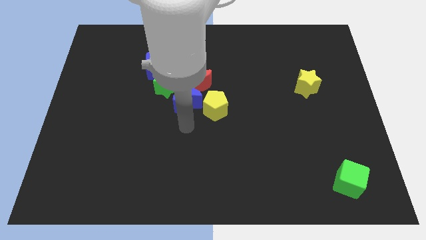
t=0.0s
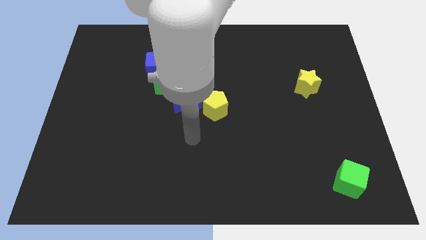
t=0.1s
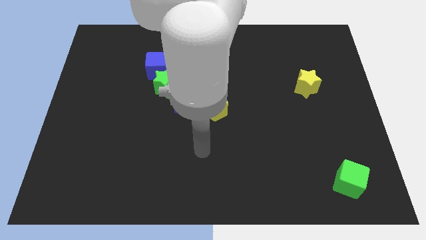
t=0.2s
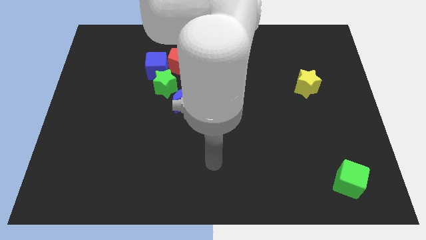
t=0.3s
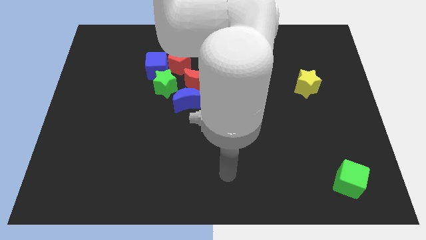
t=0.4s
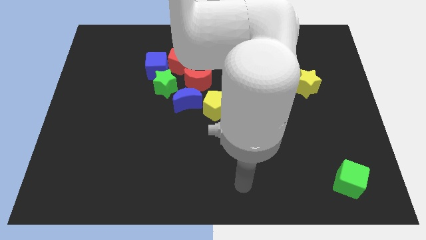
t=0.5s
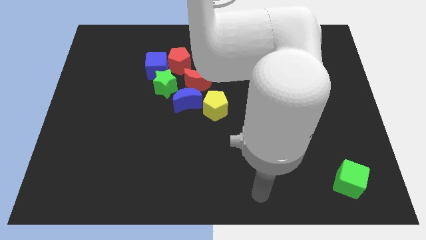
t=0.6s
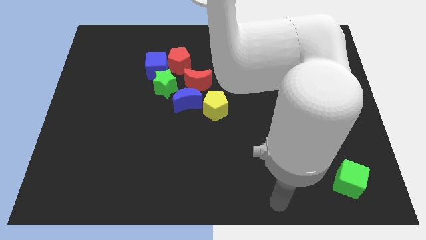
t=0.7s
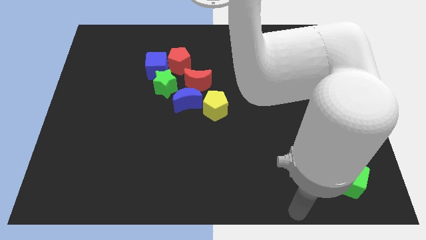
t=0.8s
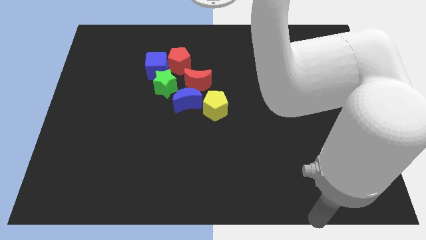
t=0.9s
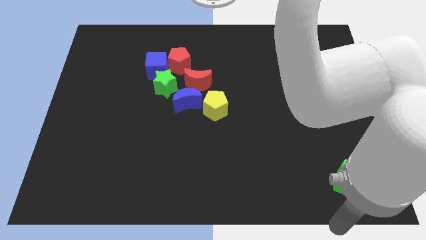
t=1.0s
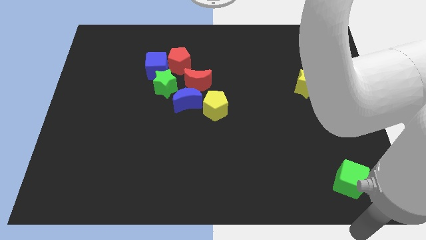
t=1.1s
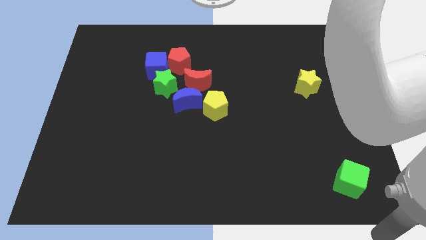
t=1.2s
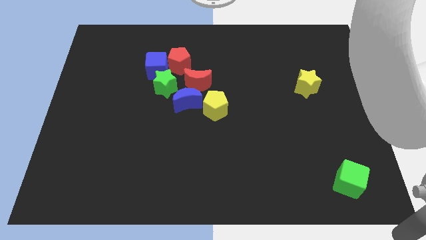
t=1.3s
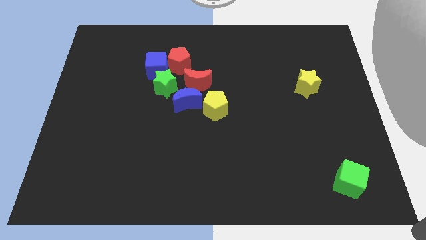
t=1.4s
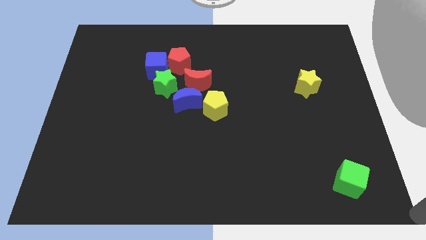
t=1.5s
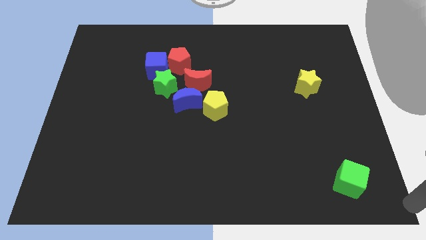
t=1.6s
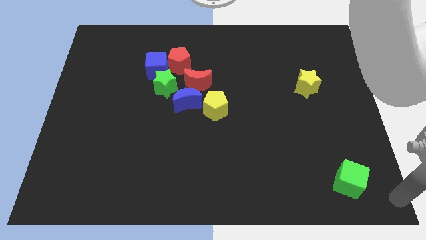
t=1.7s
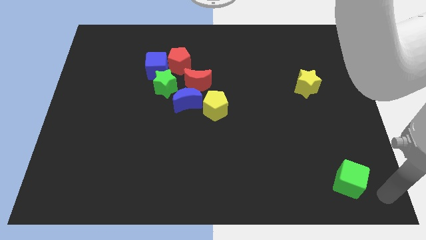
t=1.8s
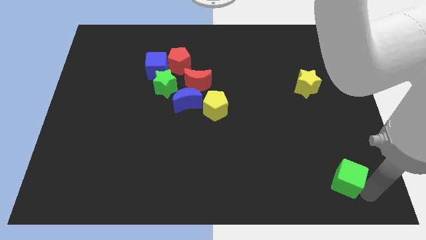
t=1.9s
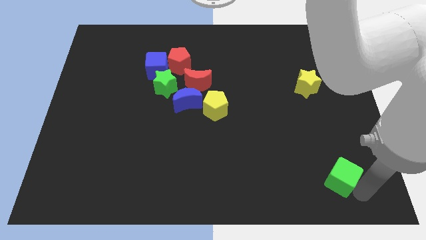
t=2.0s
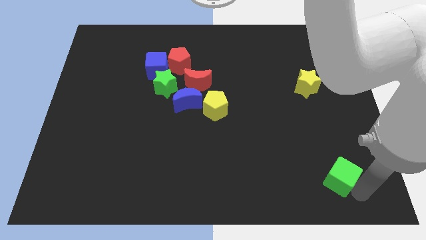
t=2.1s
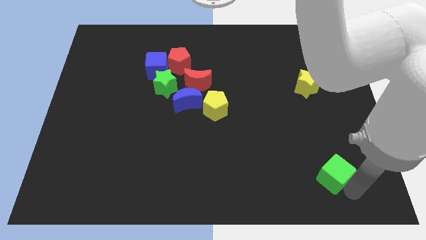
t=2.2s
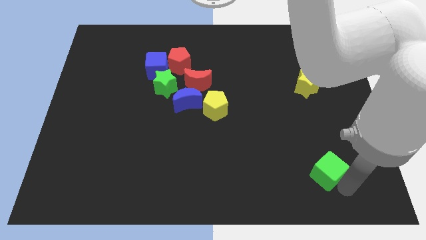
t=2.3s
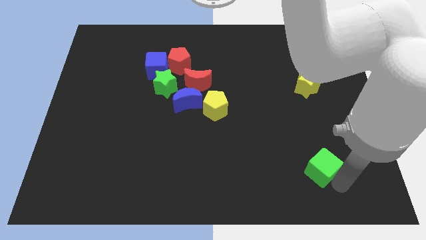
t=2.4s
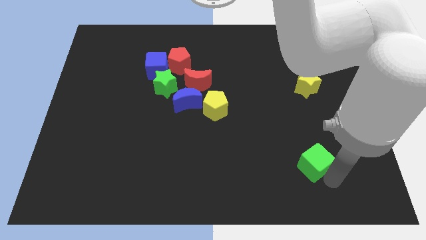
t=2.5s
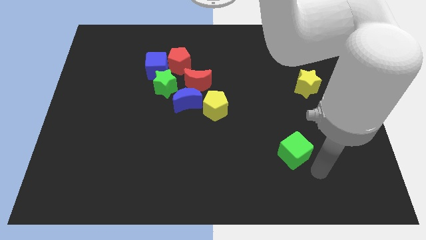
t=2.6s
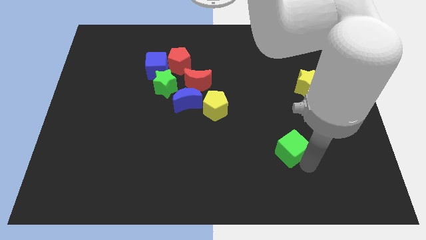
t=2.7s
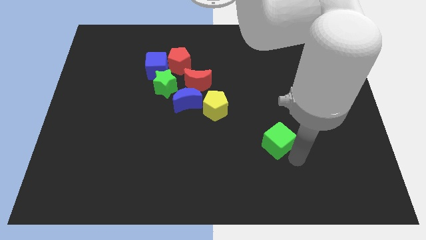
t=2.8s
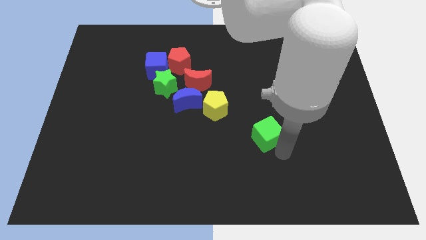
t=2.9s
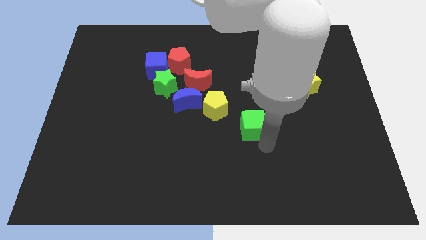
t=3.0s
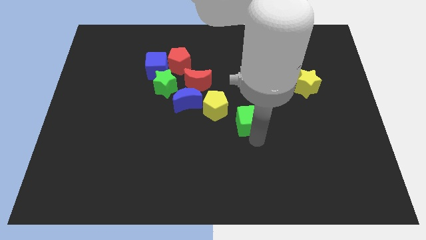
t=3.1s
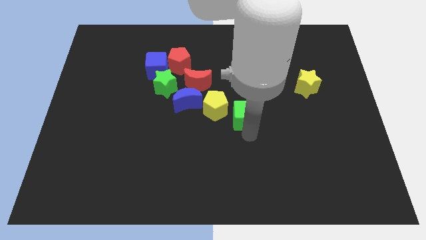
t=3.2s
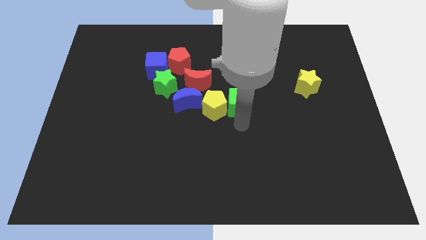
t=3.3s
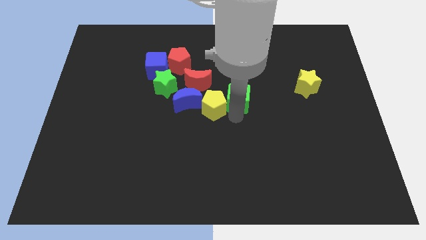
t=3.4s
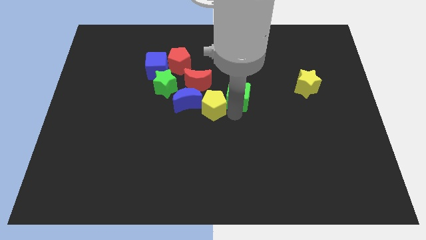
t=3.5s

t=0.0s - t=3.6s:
push the green cube into the group of blocks

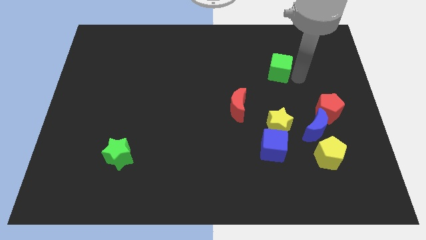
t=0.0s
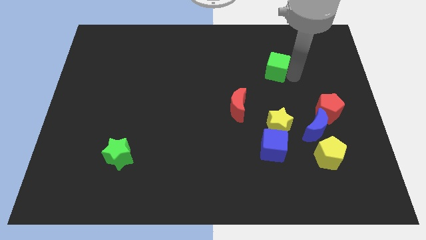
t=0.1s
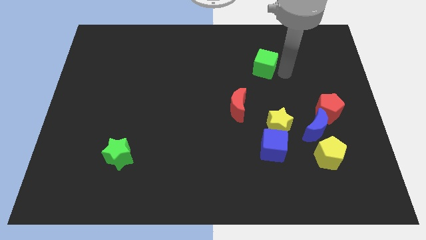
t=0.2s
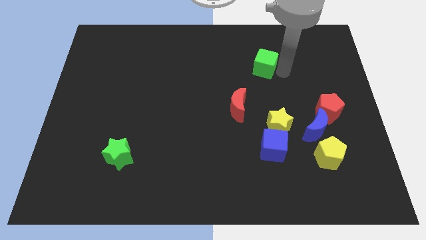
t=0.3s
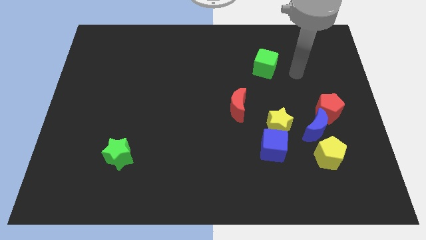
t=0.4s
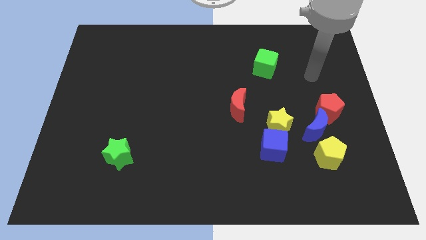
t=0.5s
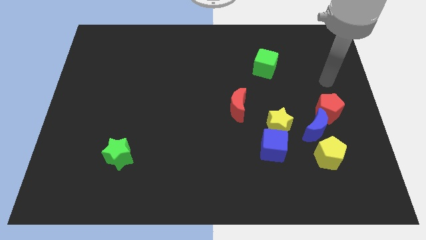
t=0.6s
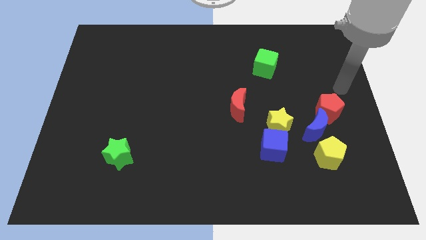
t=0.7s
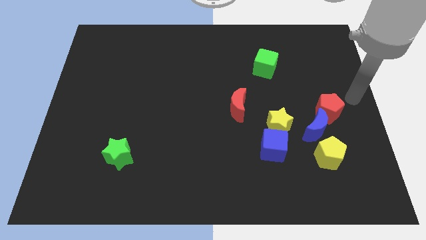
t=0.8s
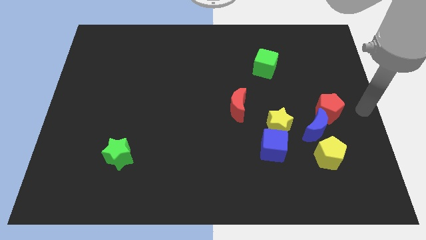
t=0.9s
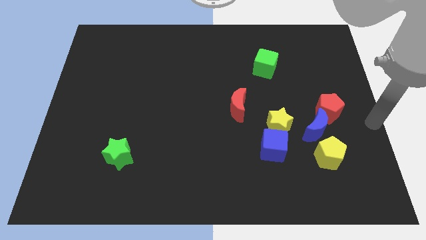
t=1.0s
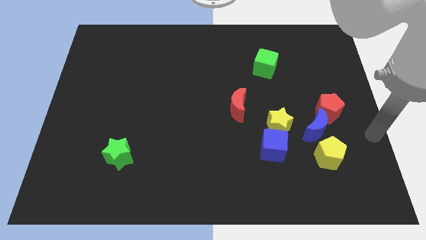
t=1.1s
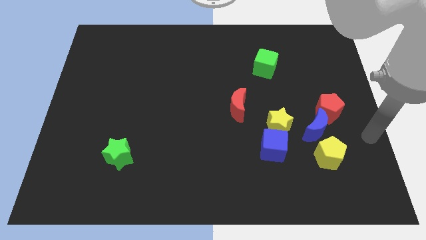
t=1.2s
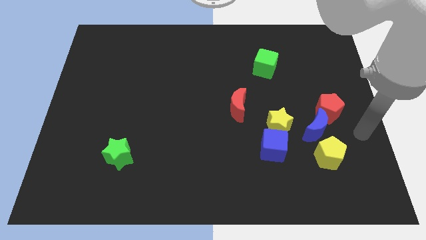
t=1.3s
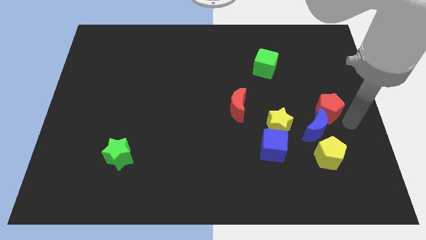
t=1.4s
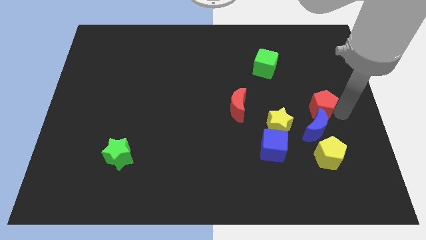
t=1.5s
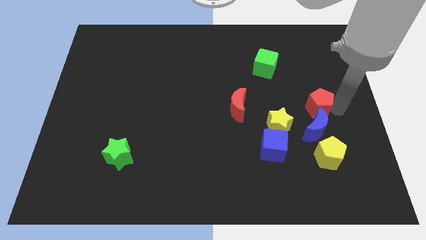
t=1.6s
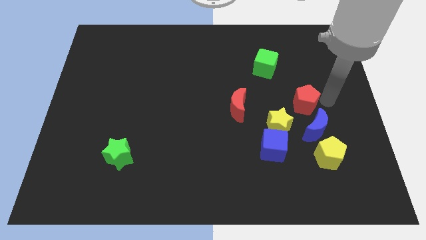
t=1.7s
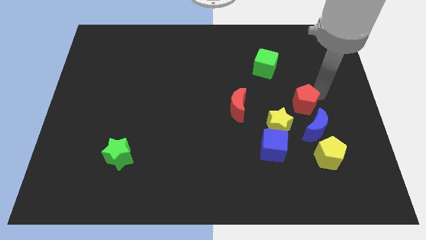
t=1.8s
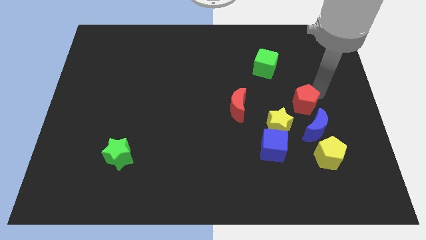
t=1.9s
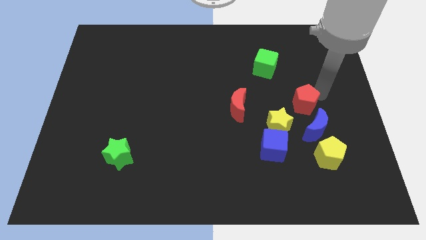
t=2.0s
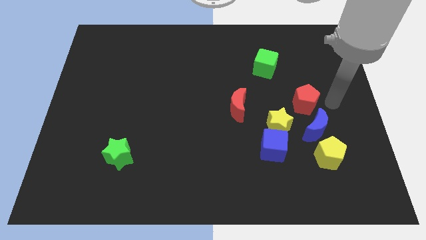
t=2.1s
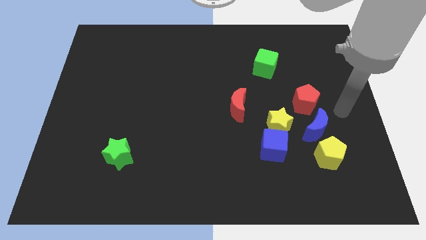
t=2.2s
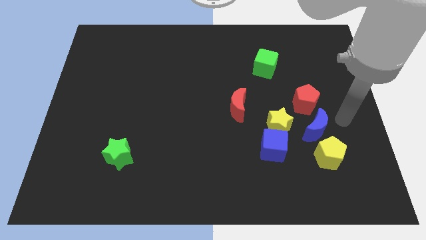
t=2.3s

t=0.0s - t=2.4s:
separate the red pentagon and blue moon

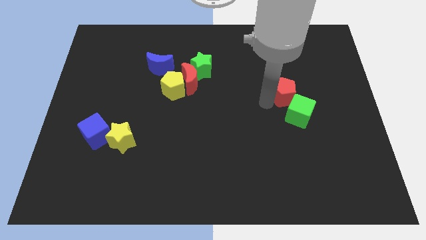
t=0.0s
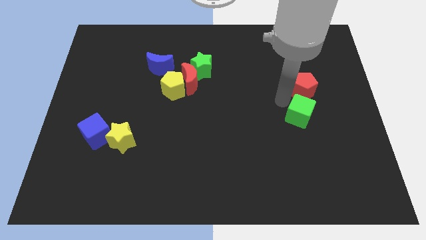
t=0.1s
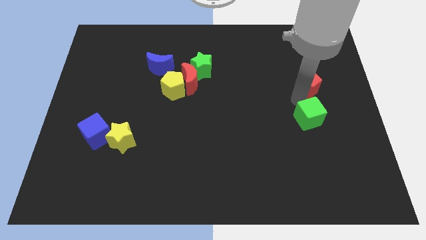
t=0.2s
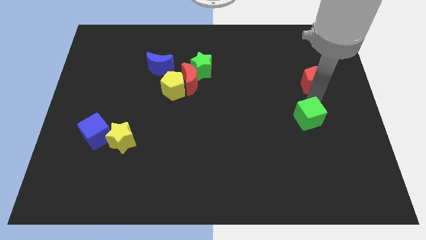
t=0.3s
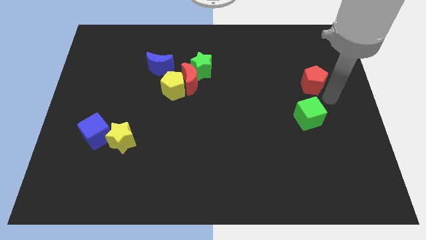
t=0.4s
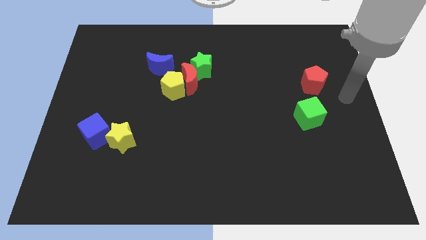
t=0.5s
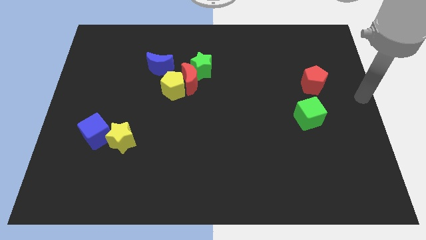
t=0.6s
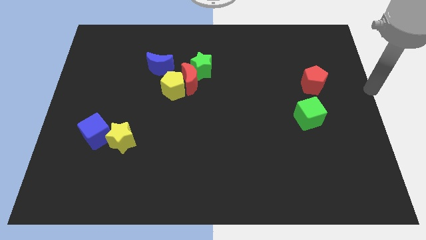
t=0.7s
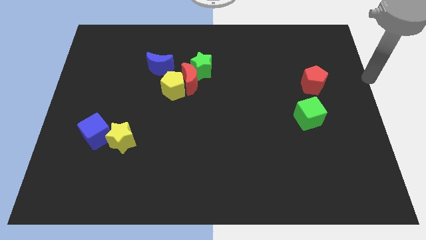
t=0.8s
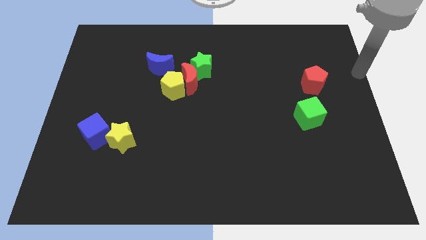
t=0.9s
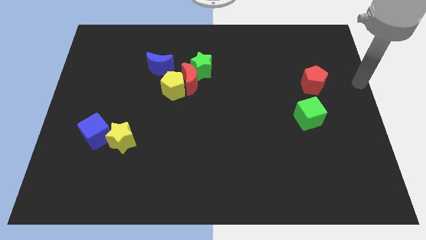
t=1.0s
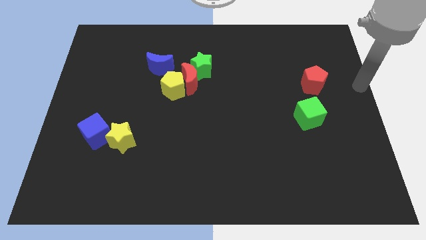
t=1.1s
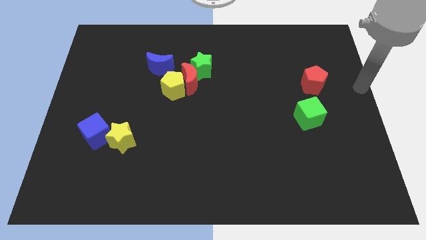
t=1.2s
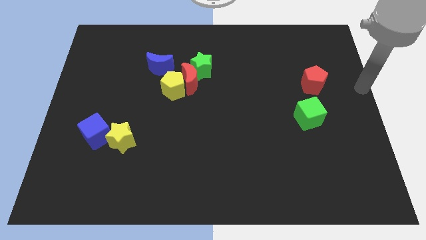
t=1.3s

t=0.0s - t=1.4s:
separate the red pentagon from the green cube

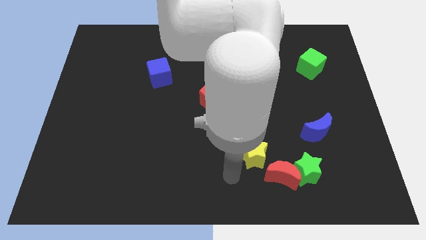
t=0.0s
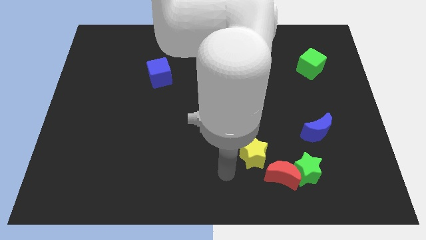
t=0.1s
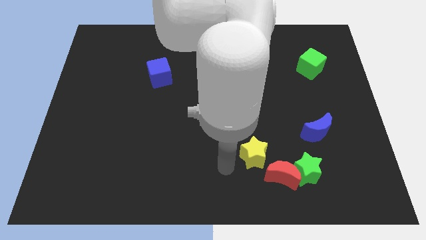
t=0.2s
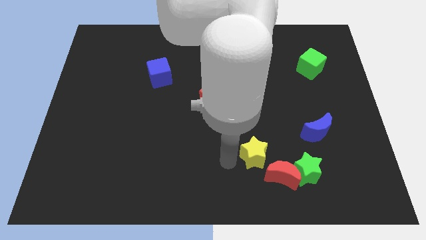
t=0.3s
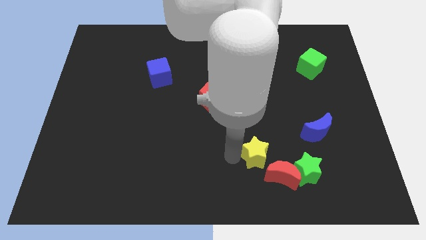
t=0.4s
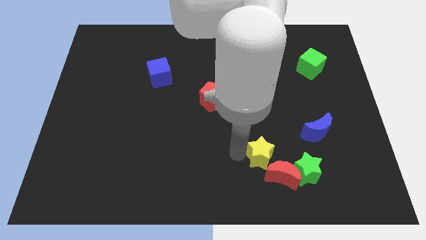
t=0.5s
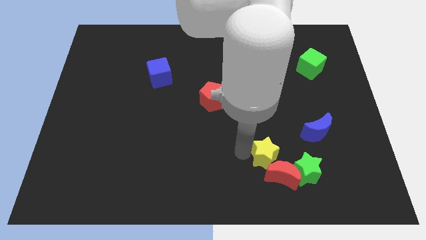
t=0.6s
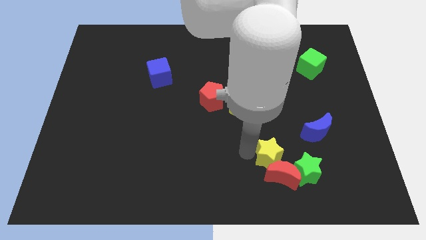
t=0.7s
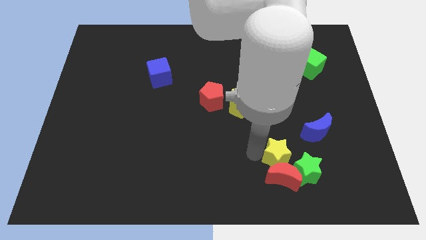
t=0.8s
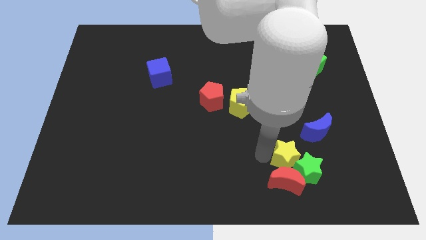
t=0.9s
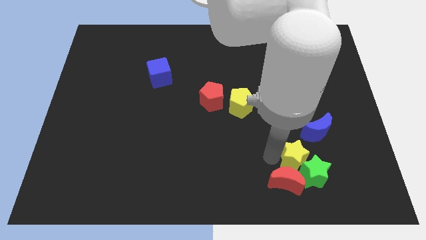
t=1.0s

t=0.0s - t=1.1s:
move the yellow star to the top left of the green star

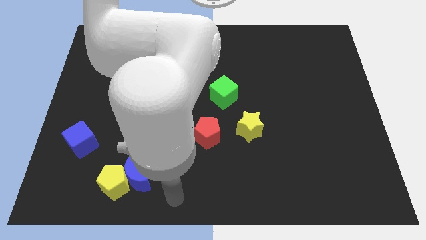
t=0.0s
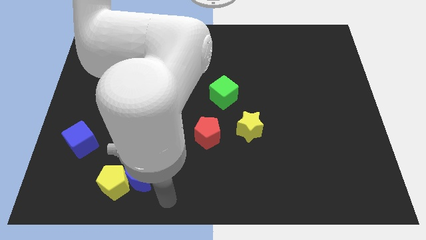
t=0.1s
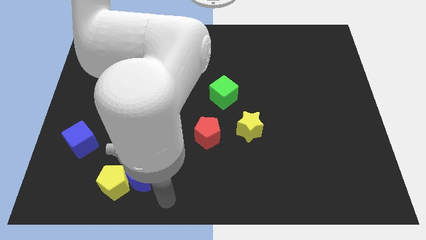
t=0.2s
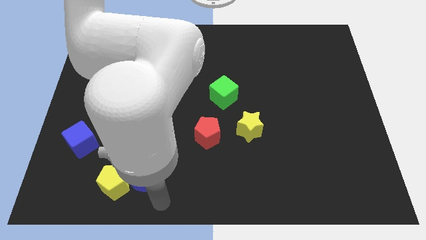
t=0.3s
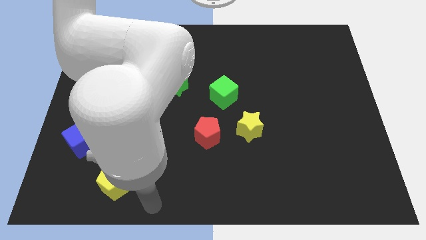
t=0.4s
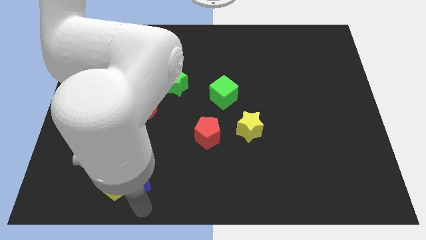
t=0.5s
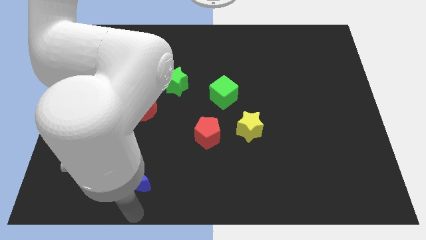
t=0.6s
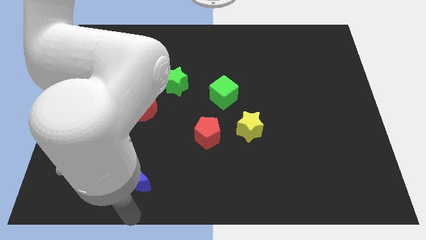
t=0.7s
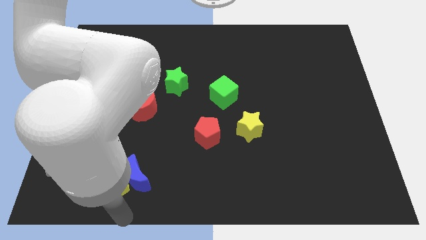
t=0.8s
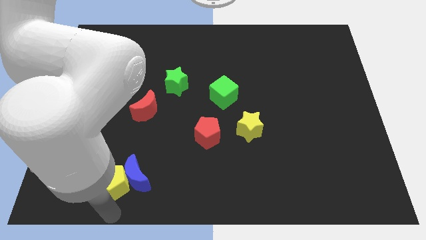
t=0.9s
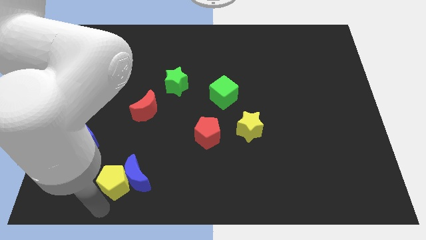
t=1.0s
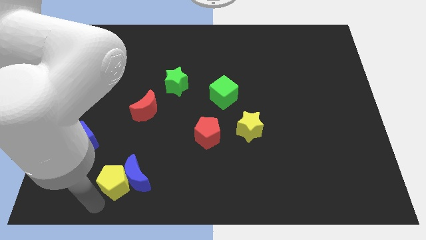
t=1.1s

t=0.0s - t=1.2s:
place your arm below yellow pentagon
